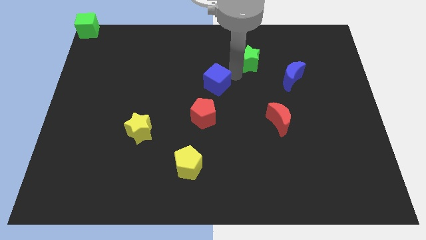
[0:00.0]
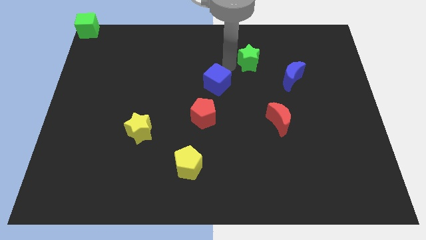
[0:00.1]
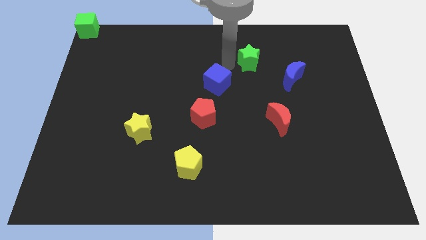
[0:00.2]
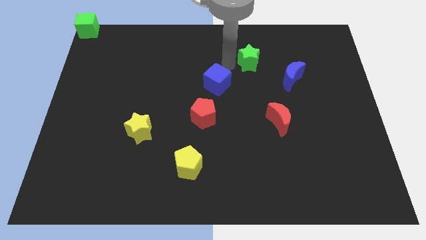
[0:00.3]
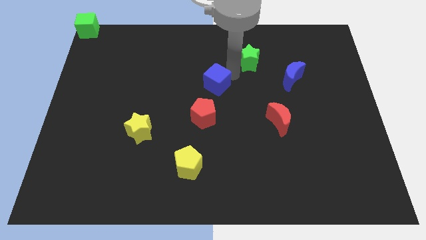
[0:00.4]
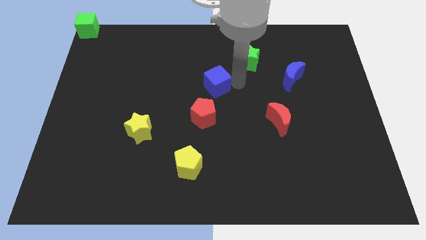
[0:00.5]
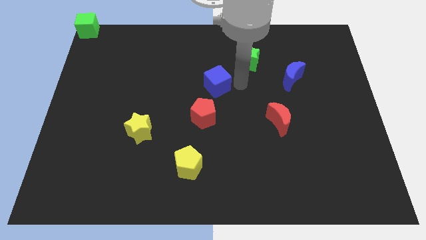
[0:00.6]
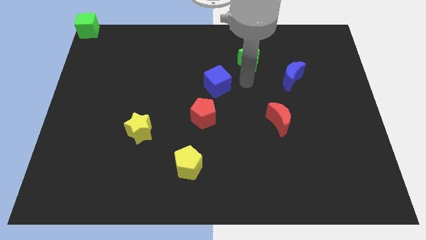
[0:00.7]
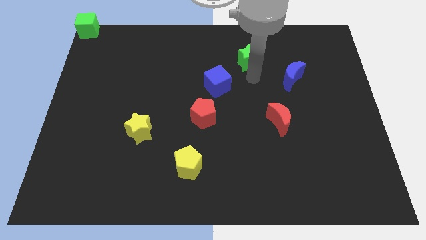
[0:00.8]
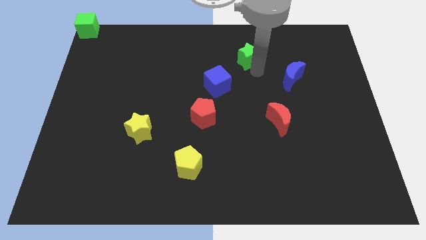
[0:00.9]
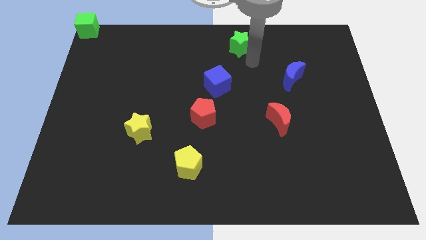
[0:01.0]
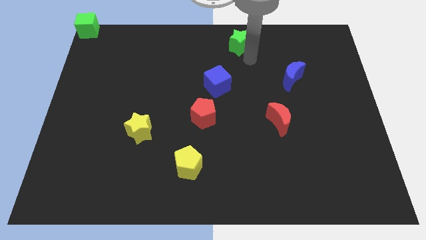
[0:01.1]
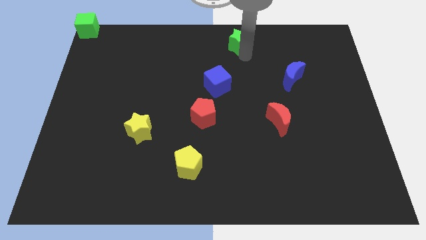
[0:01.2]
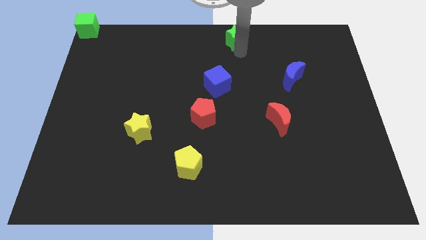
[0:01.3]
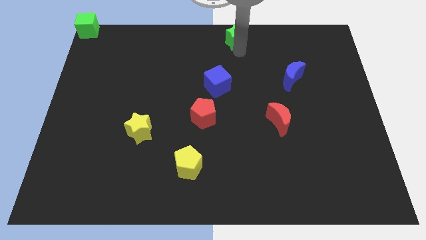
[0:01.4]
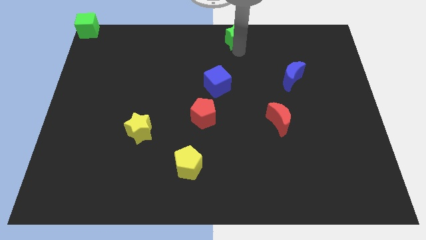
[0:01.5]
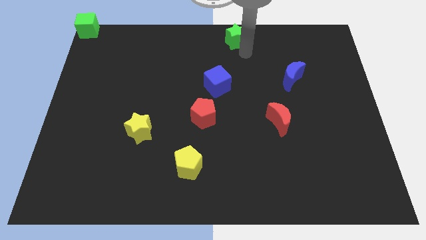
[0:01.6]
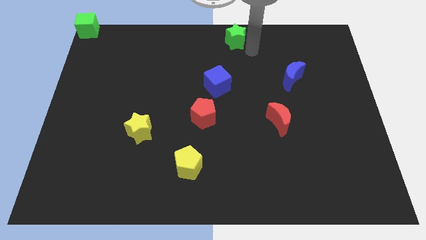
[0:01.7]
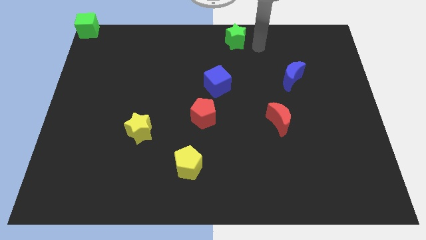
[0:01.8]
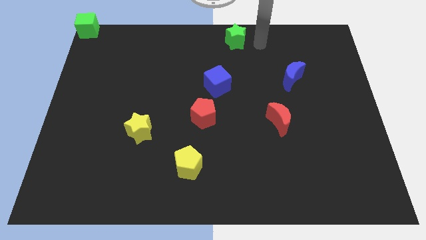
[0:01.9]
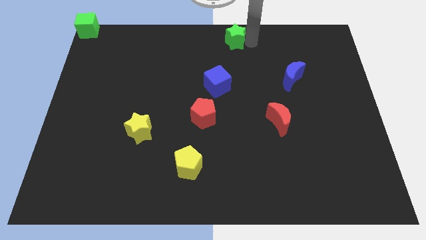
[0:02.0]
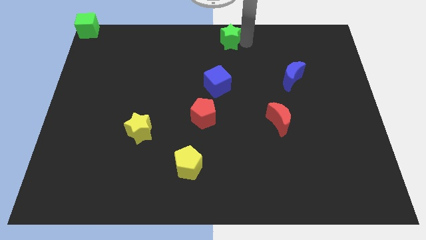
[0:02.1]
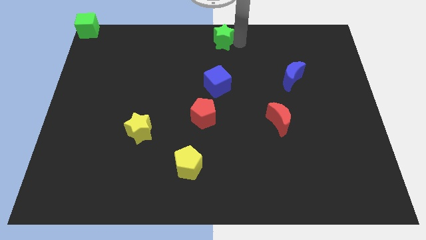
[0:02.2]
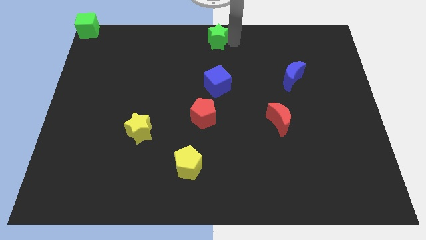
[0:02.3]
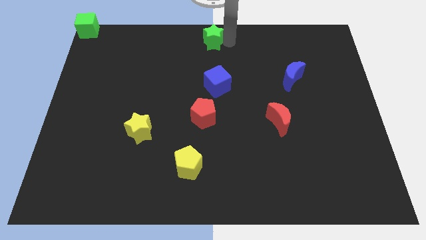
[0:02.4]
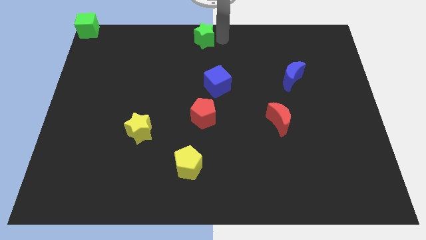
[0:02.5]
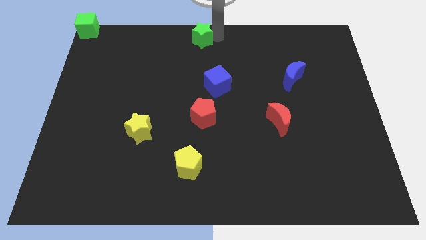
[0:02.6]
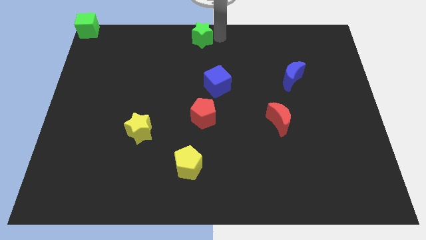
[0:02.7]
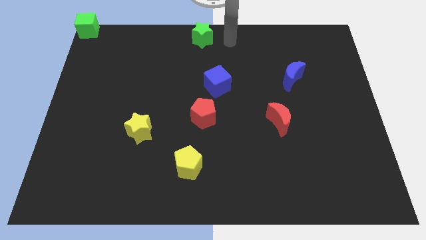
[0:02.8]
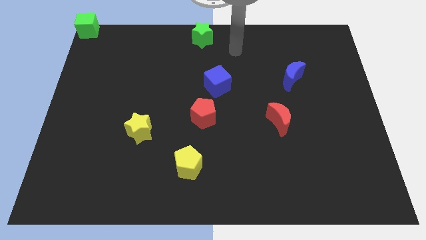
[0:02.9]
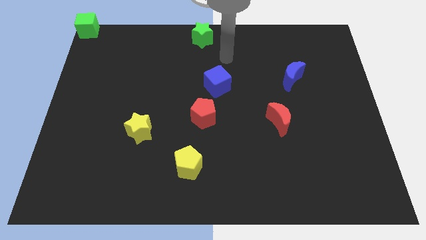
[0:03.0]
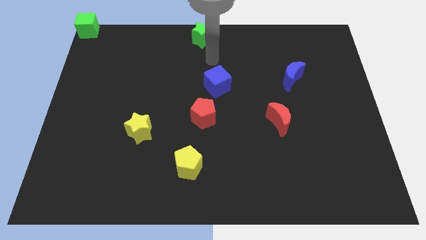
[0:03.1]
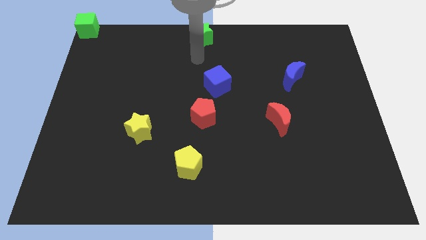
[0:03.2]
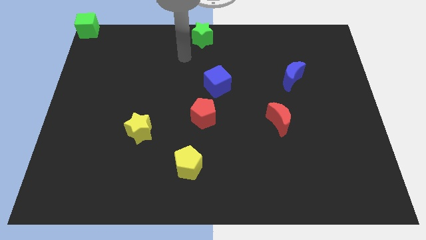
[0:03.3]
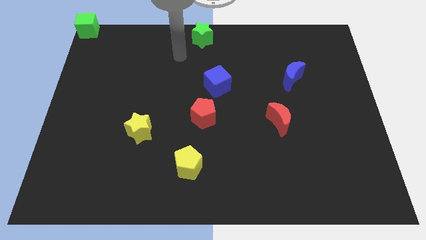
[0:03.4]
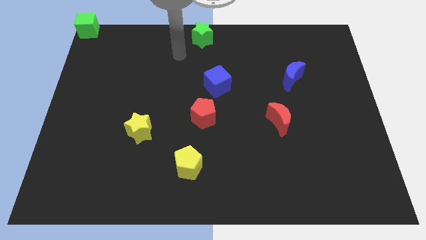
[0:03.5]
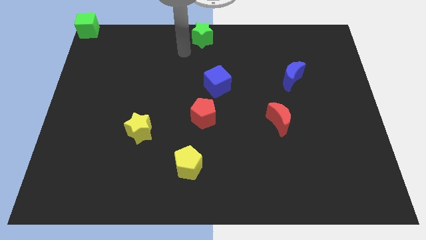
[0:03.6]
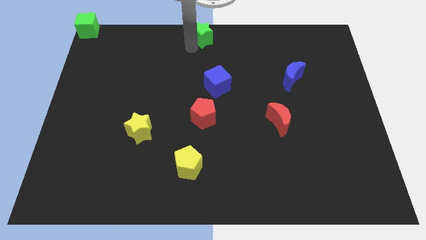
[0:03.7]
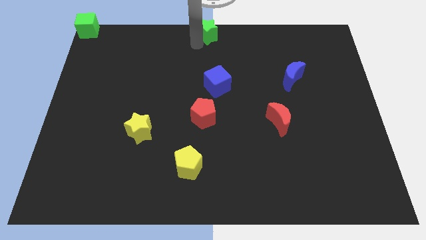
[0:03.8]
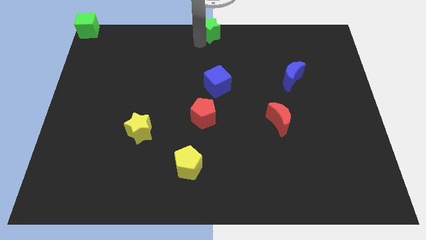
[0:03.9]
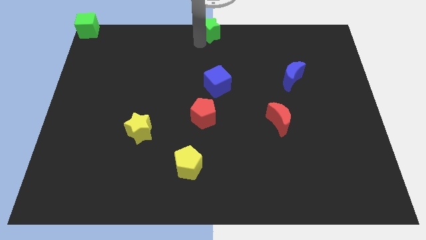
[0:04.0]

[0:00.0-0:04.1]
place green star to the top center

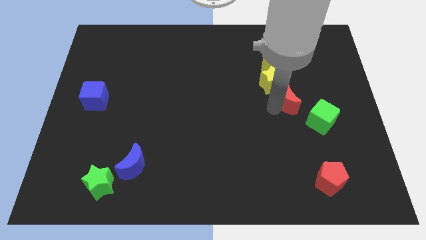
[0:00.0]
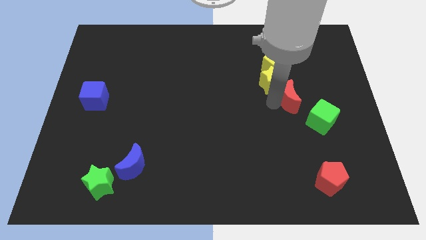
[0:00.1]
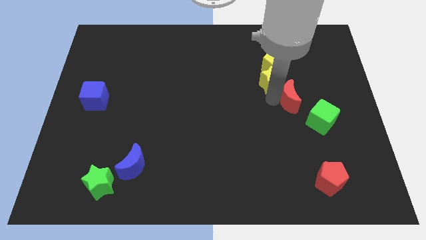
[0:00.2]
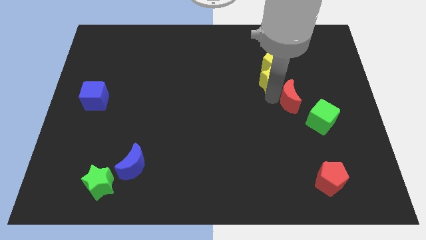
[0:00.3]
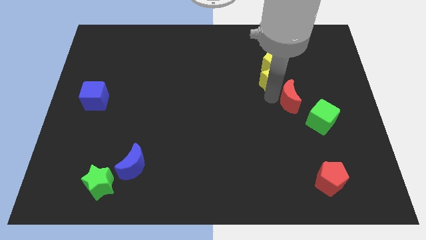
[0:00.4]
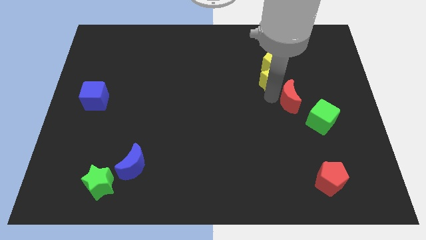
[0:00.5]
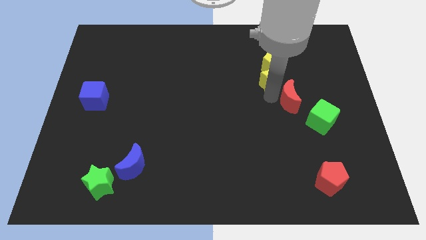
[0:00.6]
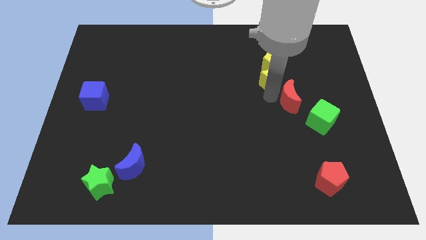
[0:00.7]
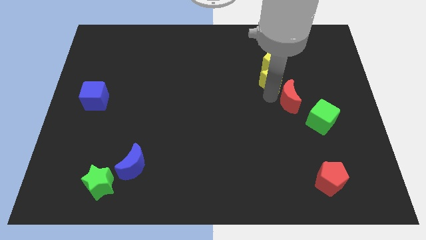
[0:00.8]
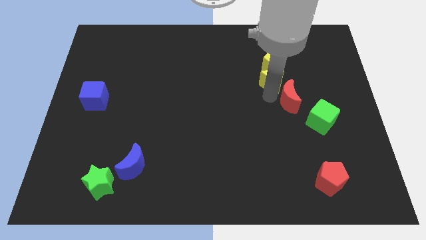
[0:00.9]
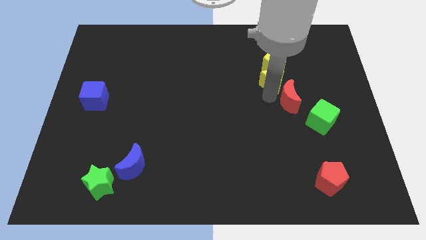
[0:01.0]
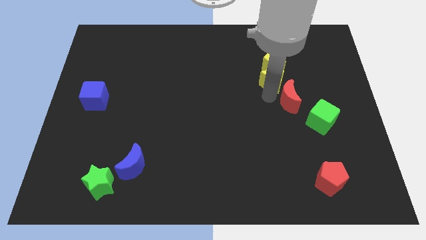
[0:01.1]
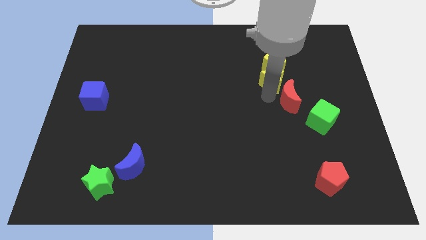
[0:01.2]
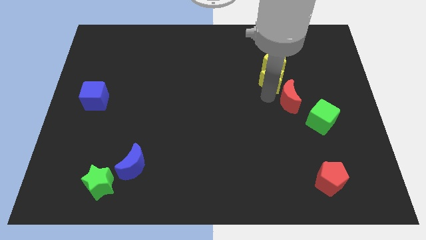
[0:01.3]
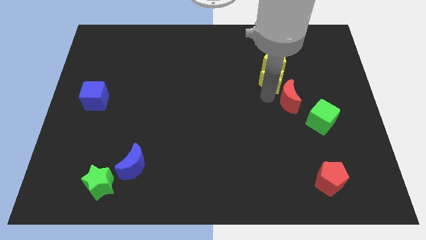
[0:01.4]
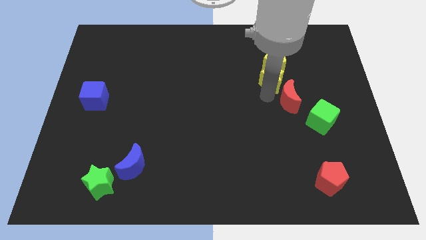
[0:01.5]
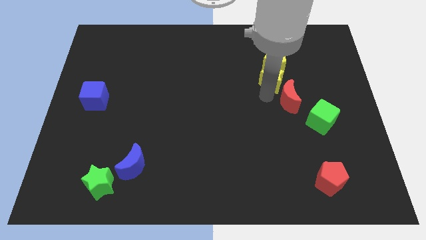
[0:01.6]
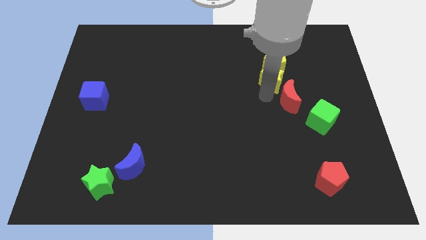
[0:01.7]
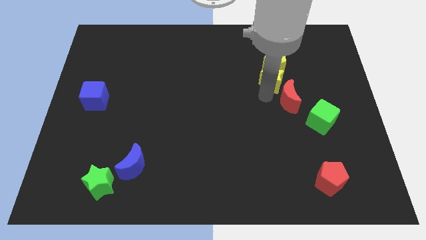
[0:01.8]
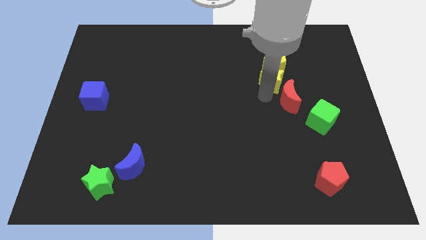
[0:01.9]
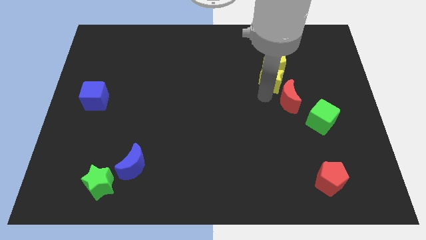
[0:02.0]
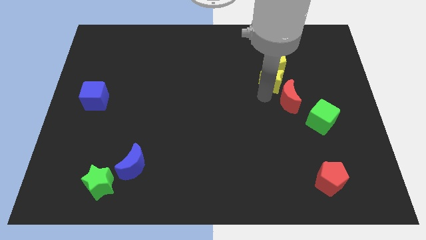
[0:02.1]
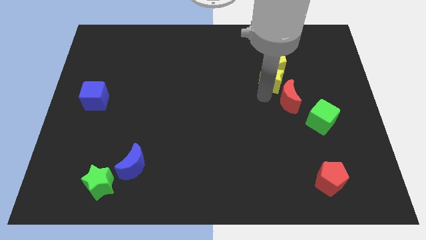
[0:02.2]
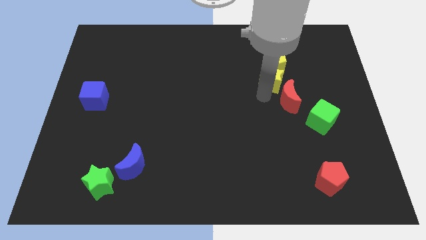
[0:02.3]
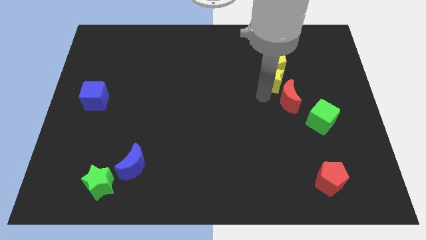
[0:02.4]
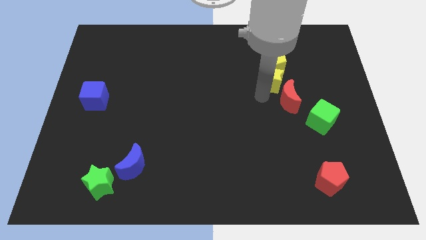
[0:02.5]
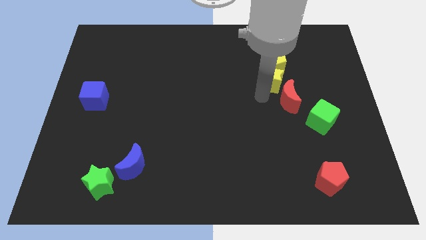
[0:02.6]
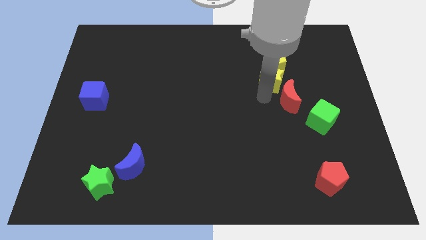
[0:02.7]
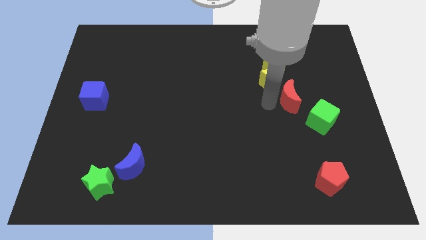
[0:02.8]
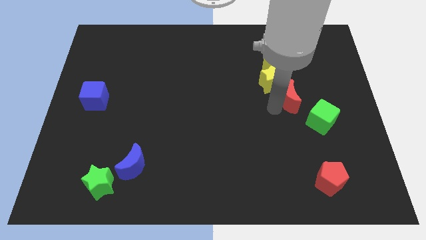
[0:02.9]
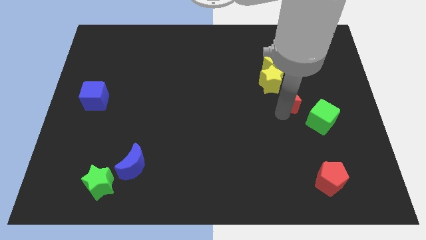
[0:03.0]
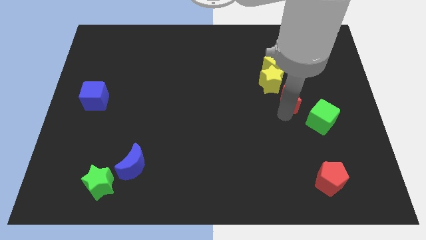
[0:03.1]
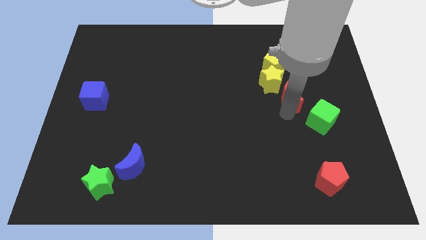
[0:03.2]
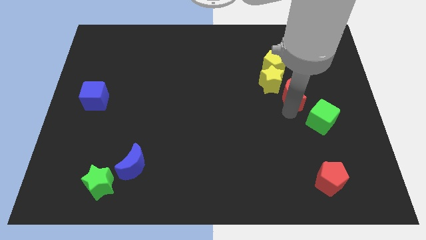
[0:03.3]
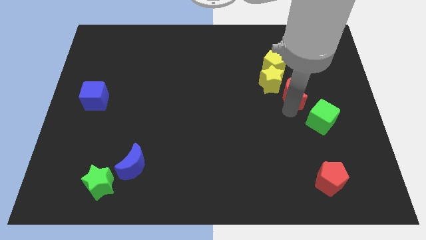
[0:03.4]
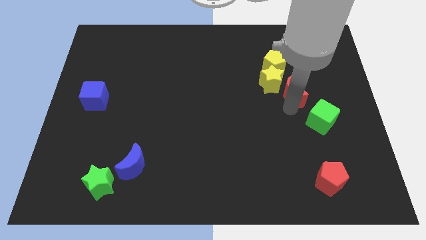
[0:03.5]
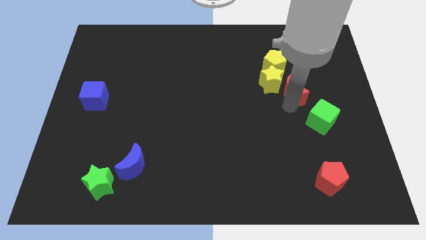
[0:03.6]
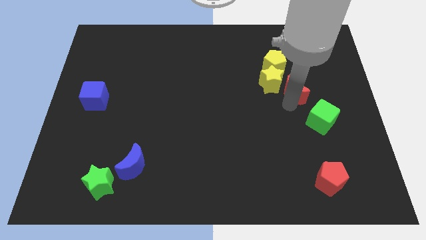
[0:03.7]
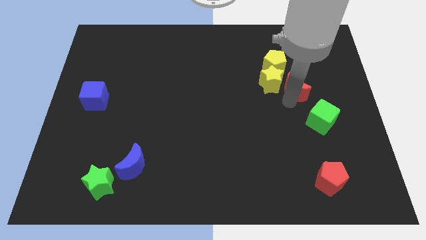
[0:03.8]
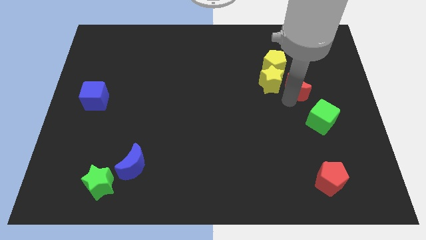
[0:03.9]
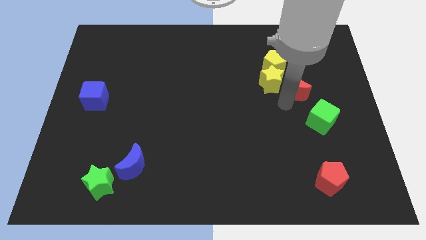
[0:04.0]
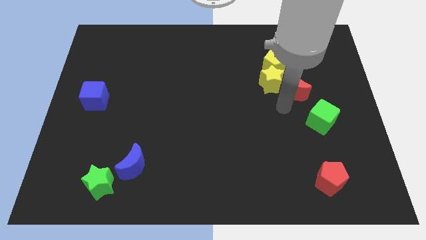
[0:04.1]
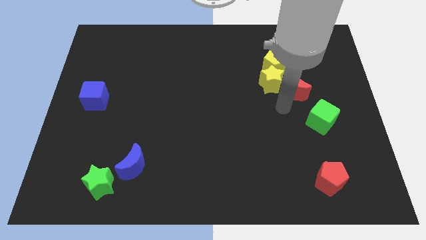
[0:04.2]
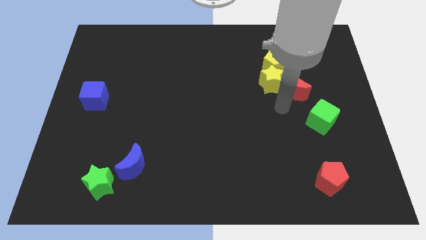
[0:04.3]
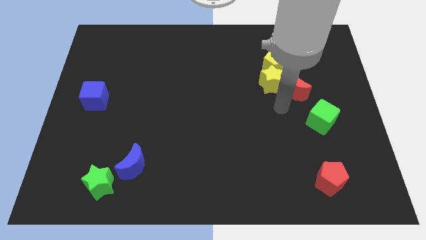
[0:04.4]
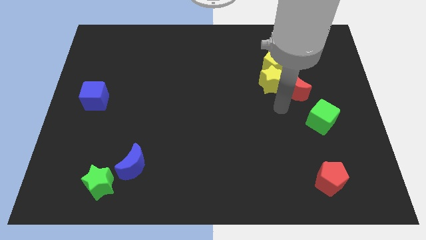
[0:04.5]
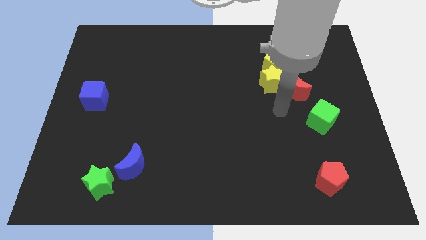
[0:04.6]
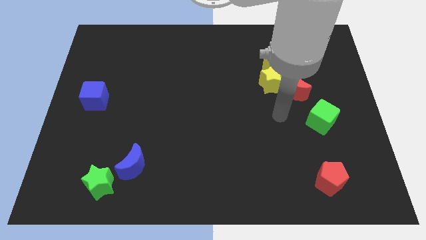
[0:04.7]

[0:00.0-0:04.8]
move the red crescent diagonal to the yellow star

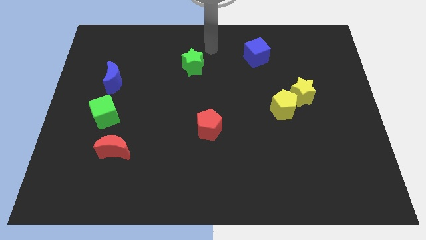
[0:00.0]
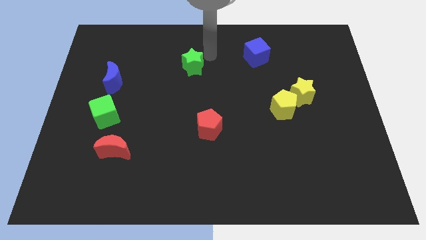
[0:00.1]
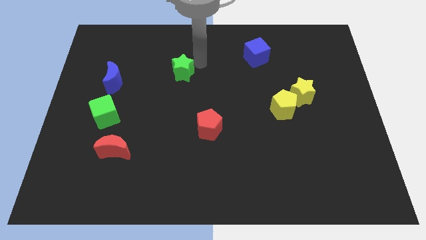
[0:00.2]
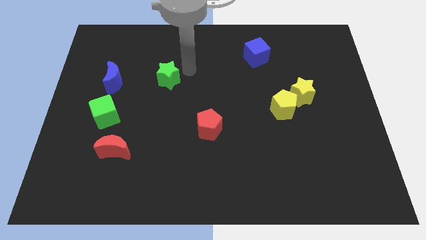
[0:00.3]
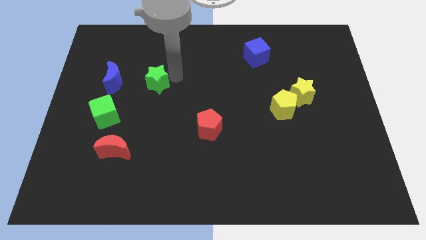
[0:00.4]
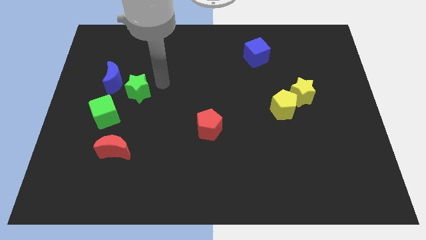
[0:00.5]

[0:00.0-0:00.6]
place the green star diagonally top left to the red pentagon
